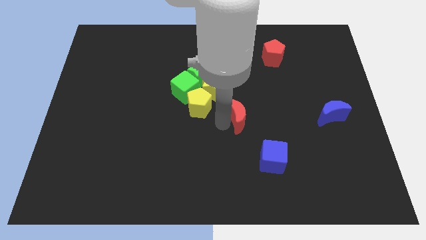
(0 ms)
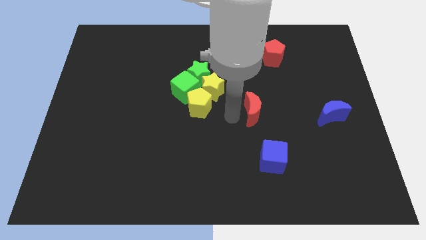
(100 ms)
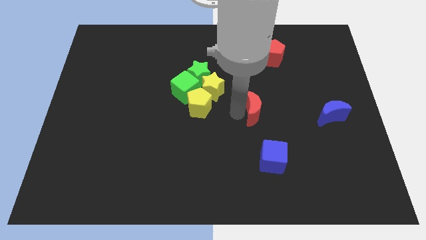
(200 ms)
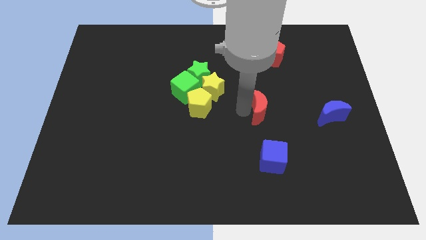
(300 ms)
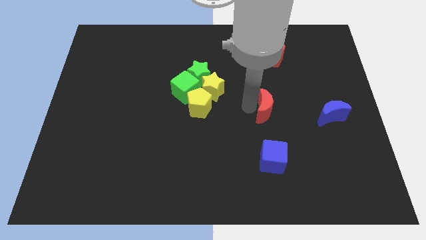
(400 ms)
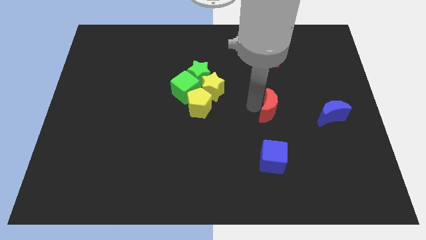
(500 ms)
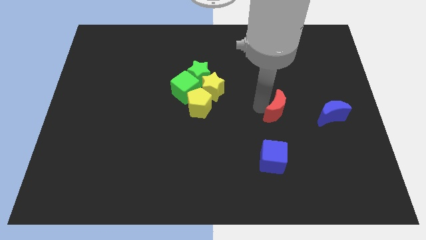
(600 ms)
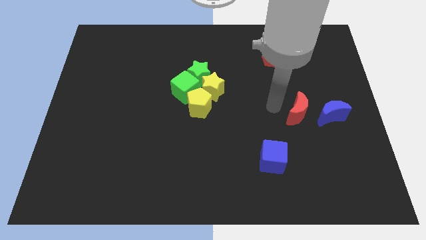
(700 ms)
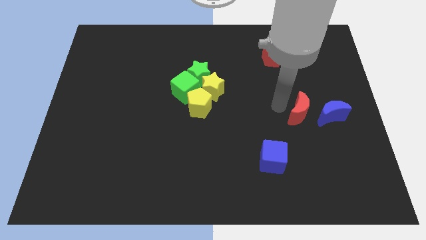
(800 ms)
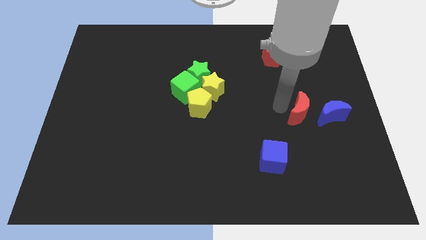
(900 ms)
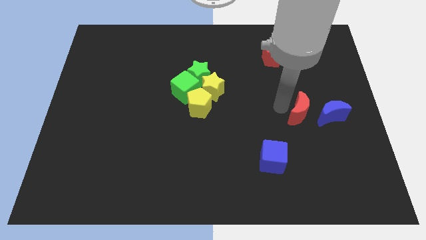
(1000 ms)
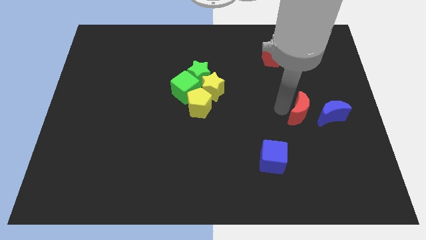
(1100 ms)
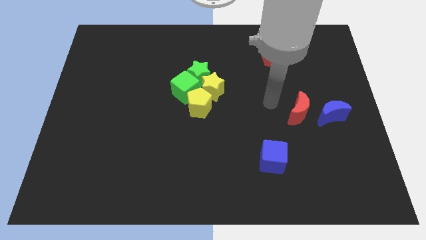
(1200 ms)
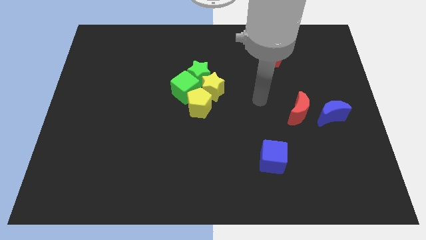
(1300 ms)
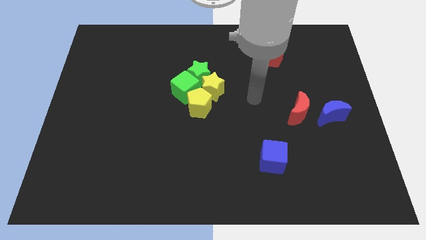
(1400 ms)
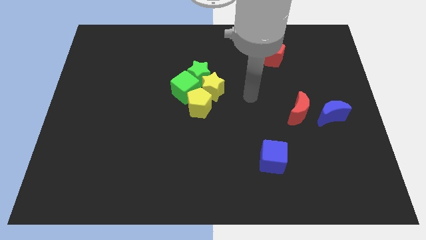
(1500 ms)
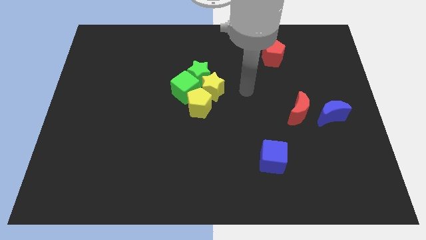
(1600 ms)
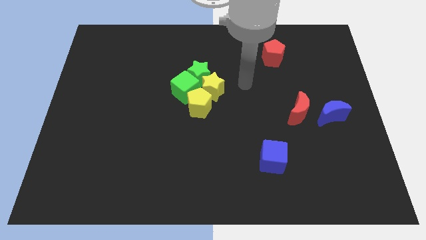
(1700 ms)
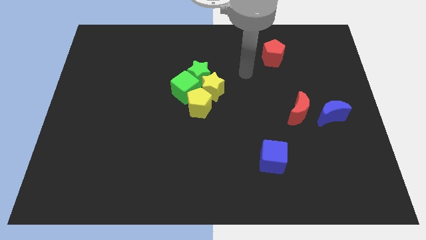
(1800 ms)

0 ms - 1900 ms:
move the red moon towards the blue moon

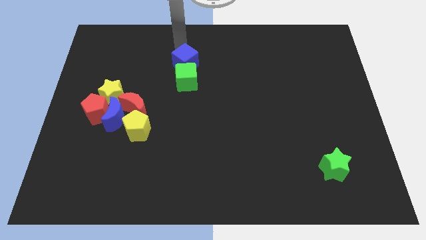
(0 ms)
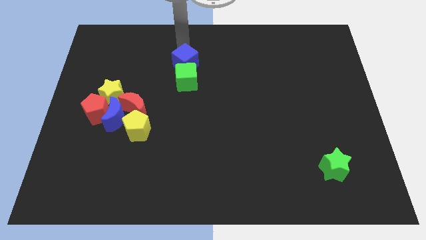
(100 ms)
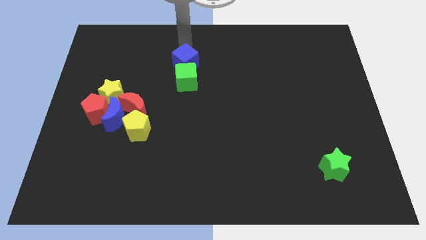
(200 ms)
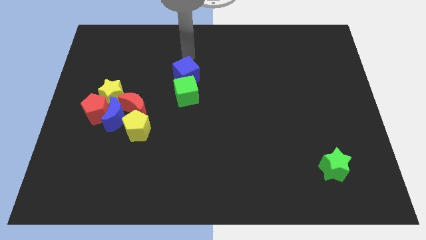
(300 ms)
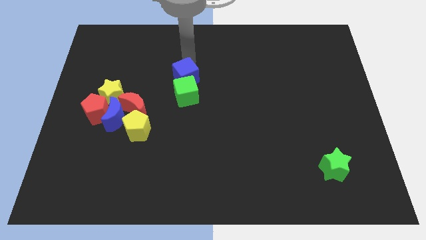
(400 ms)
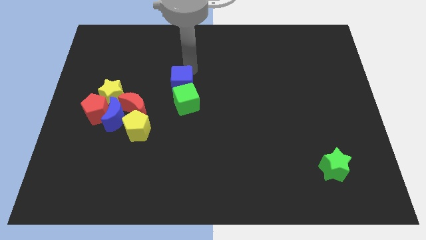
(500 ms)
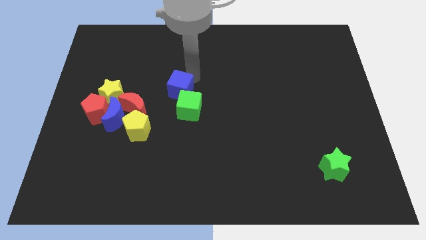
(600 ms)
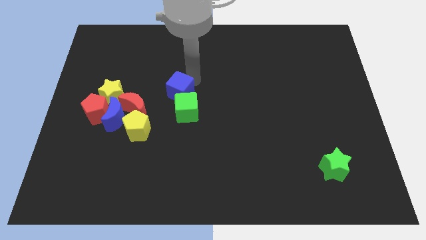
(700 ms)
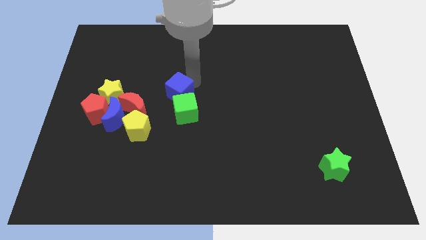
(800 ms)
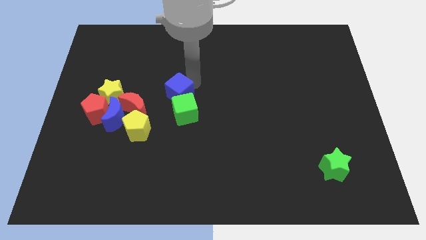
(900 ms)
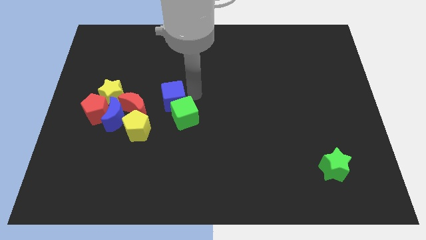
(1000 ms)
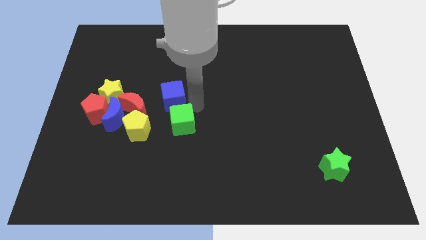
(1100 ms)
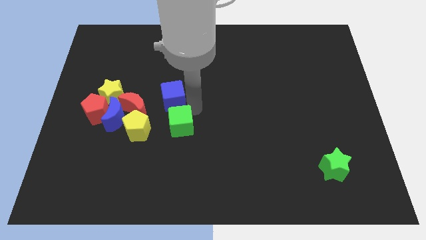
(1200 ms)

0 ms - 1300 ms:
push the blue cube into the green cube

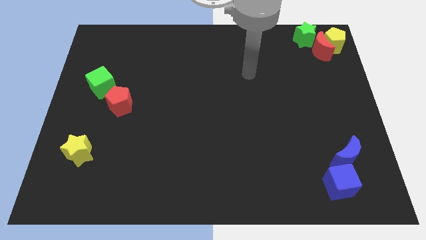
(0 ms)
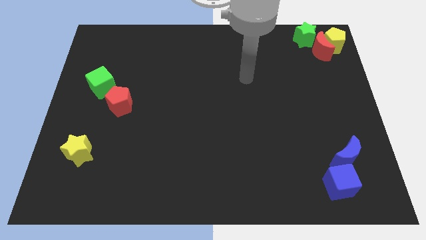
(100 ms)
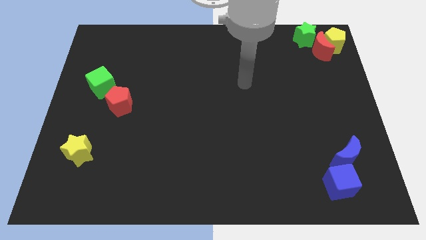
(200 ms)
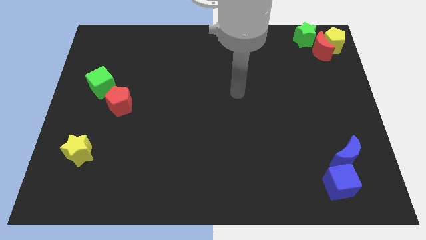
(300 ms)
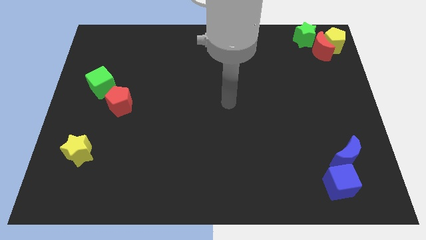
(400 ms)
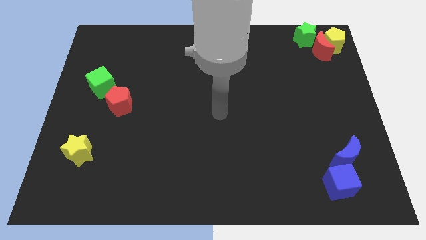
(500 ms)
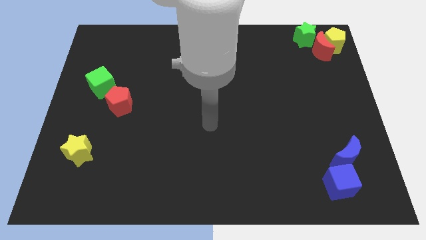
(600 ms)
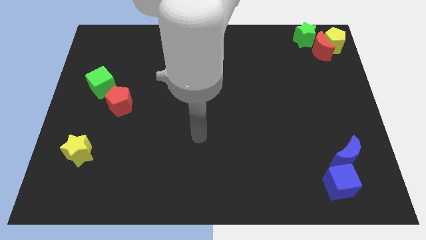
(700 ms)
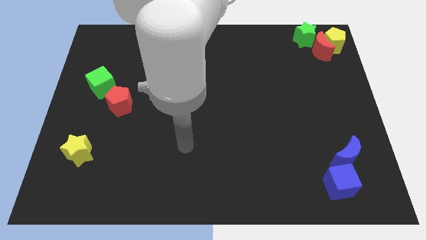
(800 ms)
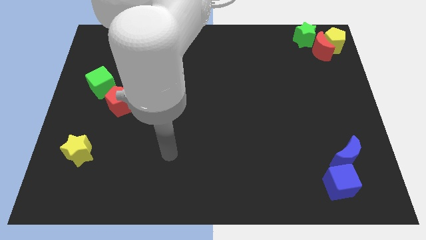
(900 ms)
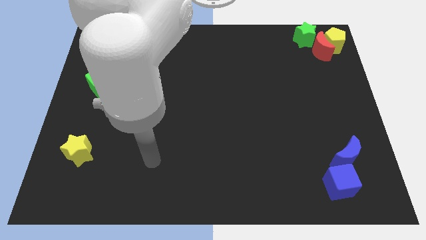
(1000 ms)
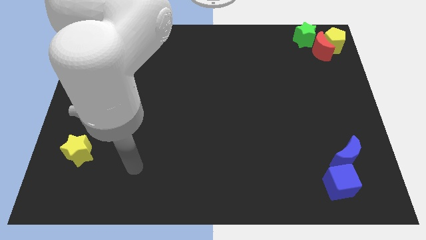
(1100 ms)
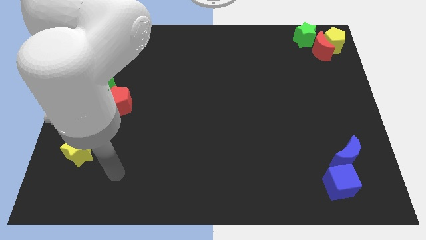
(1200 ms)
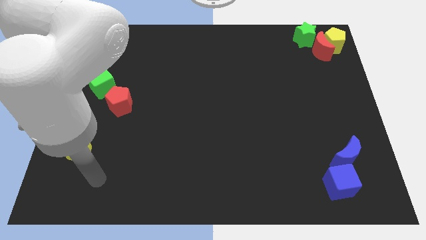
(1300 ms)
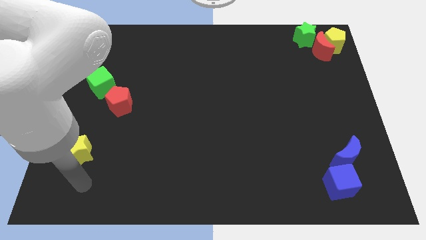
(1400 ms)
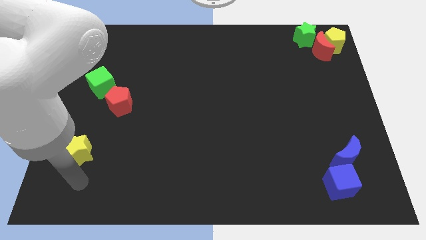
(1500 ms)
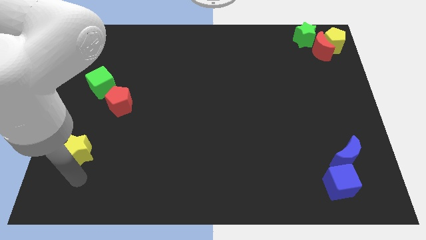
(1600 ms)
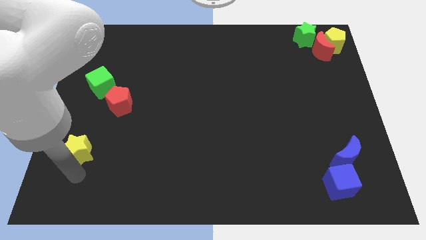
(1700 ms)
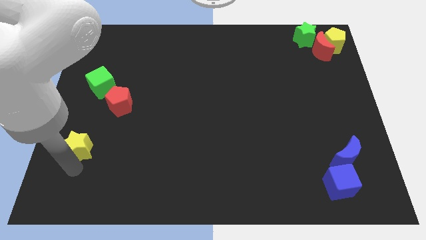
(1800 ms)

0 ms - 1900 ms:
tap the yellow star

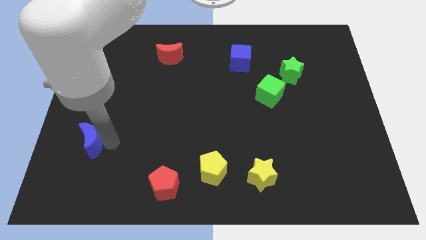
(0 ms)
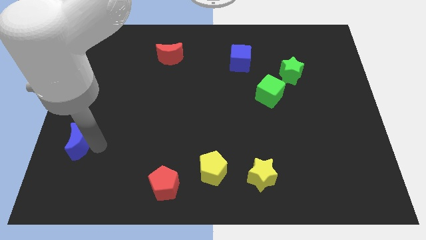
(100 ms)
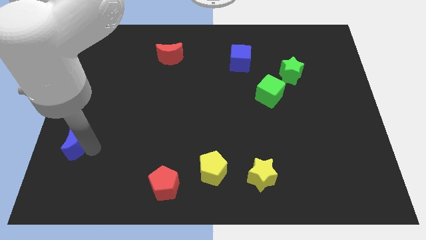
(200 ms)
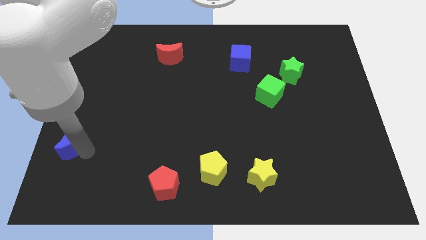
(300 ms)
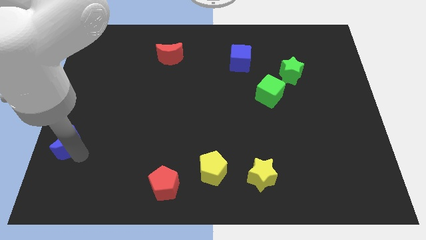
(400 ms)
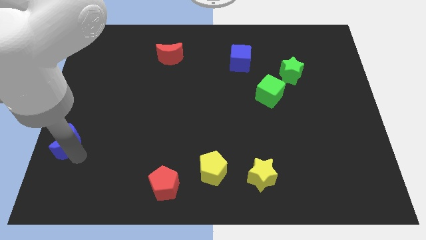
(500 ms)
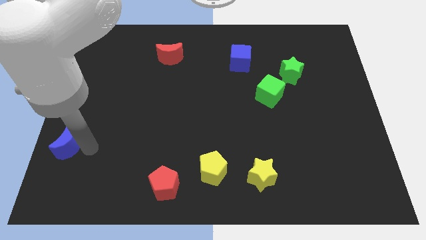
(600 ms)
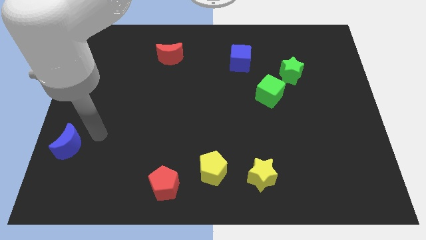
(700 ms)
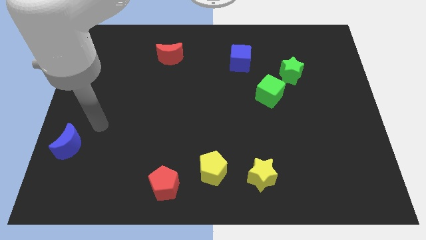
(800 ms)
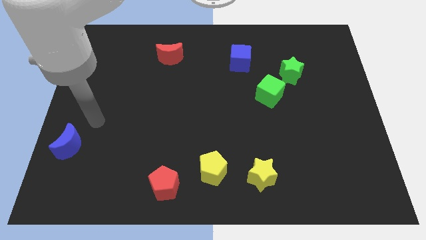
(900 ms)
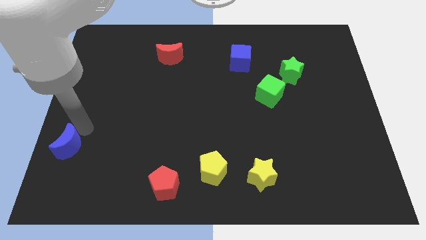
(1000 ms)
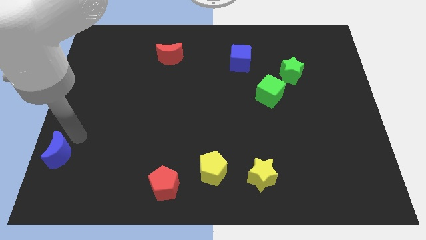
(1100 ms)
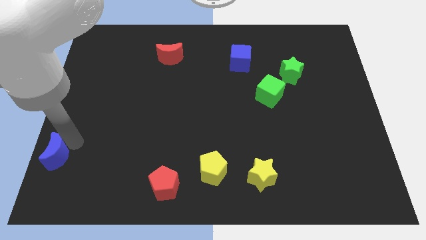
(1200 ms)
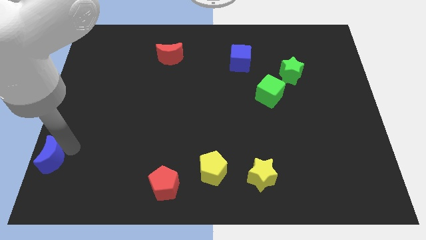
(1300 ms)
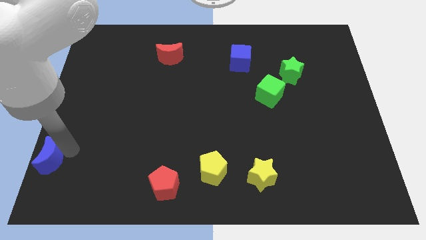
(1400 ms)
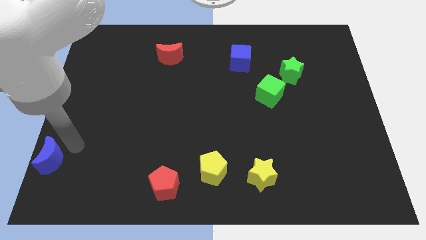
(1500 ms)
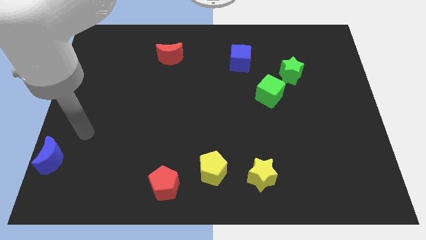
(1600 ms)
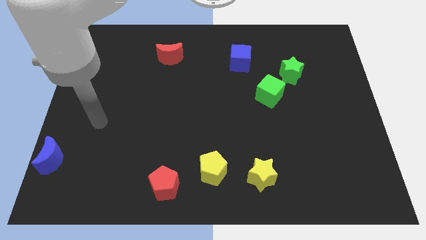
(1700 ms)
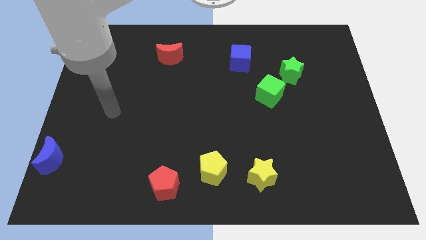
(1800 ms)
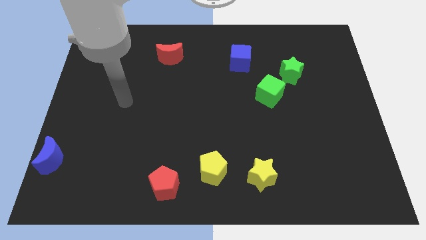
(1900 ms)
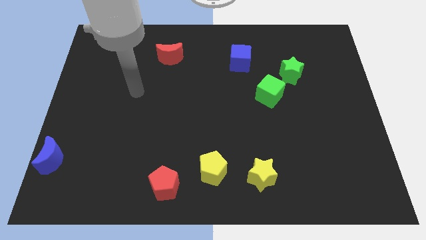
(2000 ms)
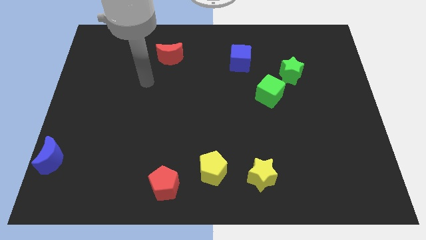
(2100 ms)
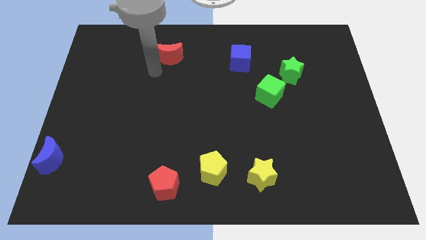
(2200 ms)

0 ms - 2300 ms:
move the blue moon slightly towards left

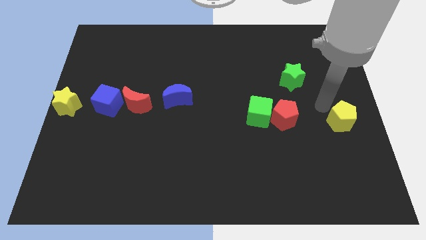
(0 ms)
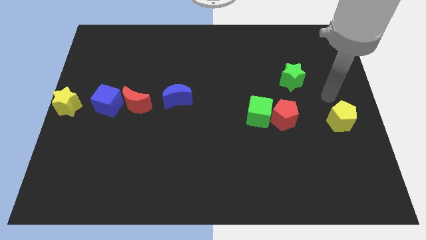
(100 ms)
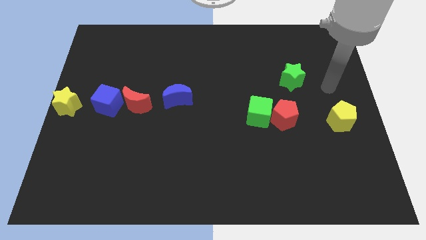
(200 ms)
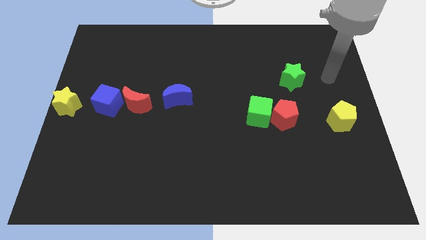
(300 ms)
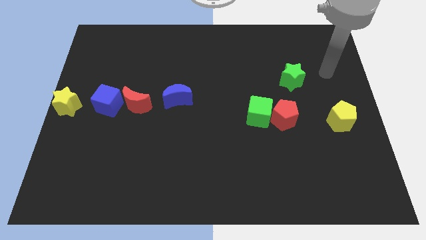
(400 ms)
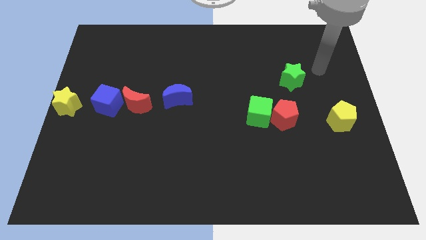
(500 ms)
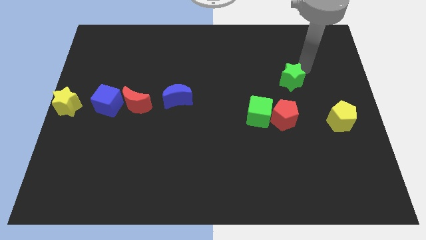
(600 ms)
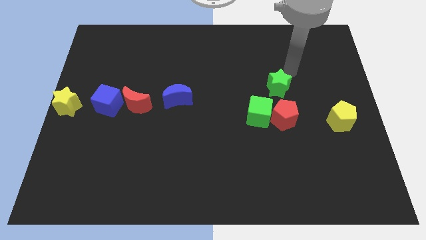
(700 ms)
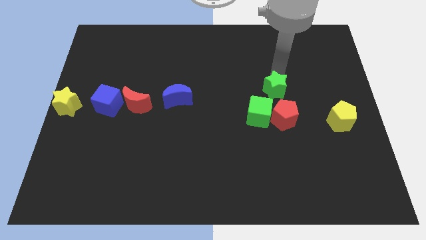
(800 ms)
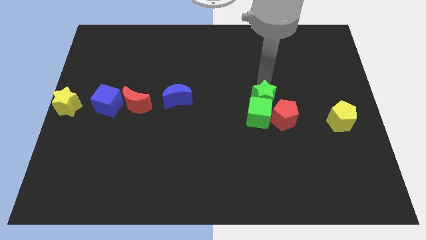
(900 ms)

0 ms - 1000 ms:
push the green star towards the green cube

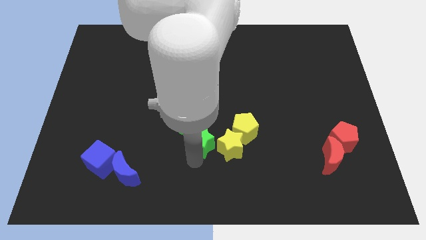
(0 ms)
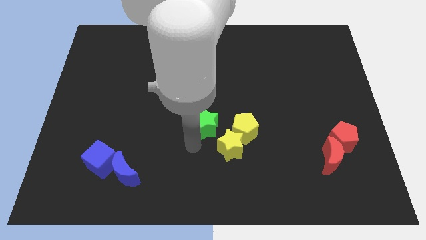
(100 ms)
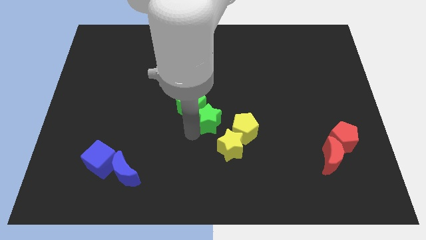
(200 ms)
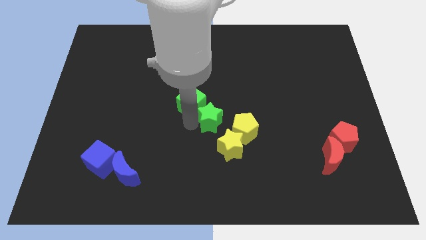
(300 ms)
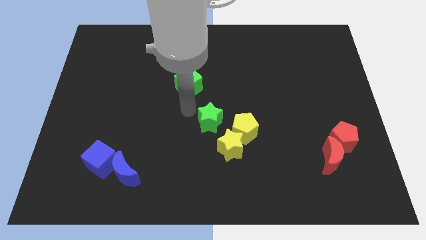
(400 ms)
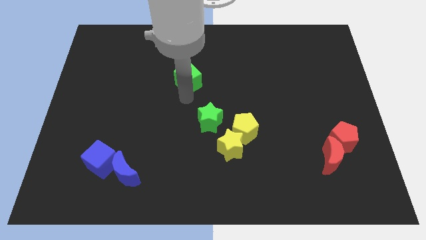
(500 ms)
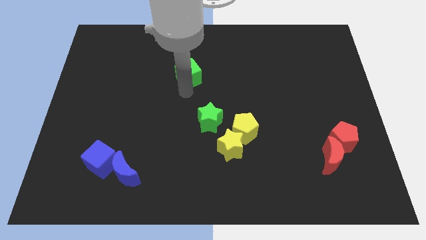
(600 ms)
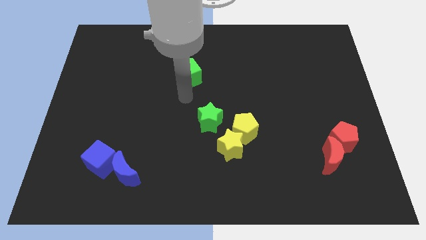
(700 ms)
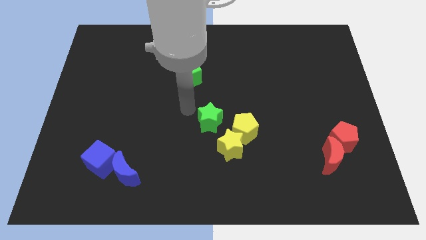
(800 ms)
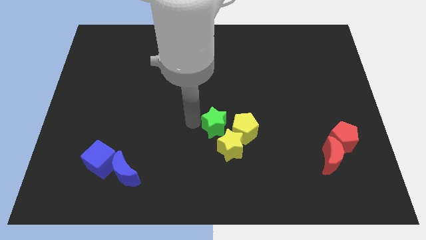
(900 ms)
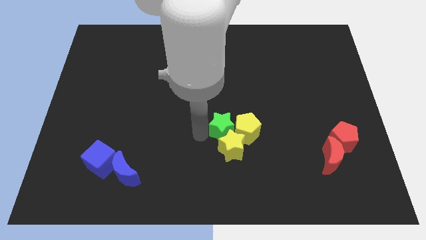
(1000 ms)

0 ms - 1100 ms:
separate the green star and green cube
